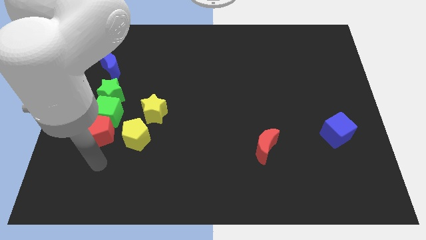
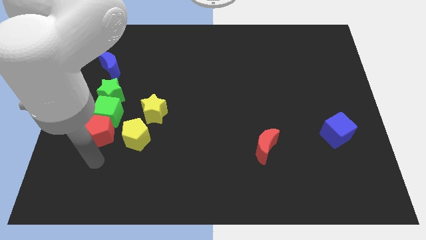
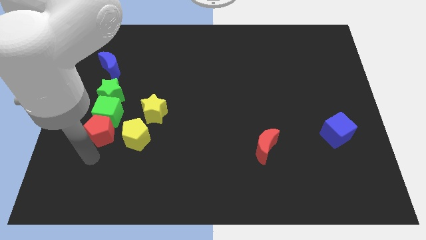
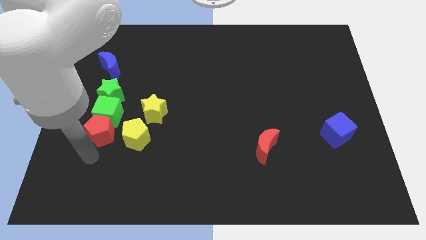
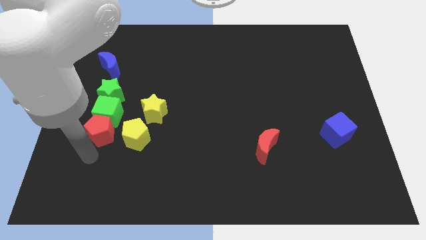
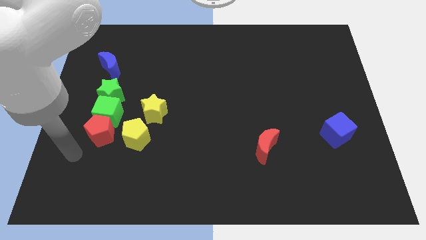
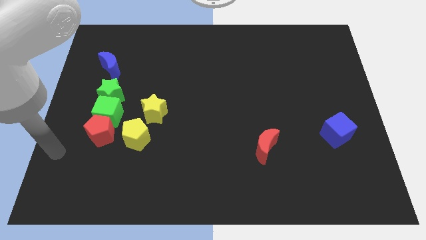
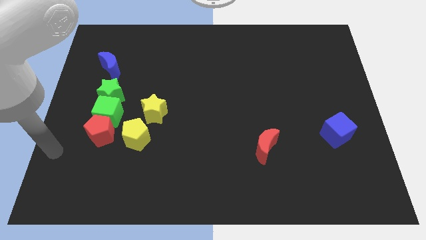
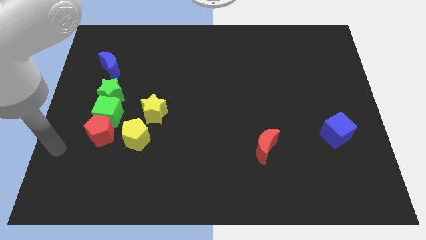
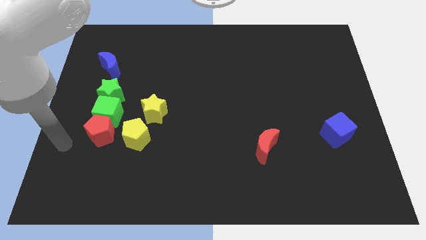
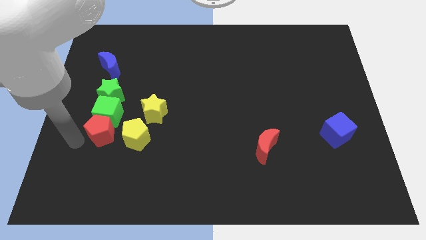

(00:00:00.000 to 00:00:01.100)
place the arm left to the red pentagon

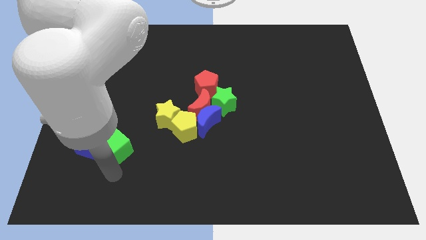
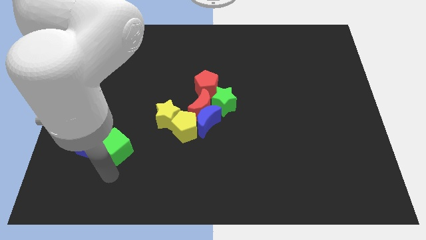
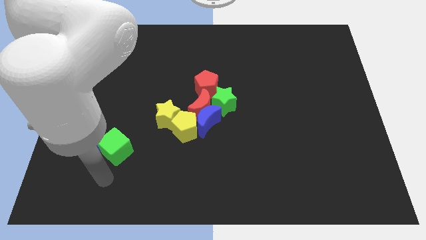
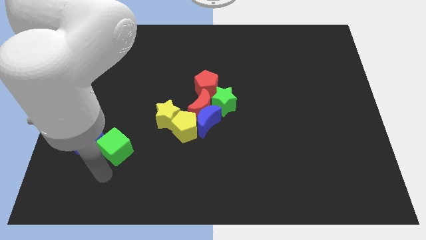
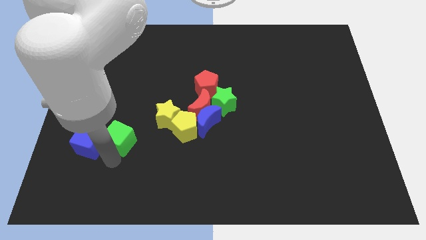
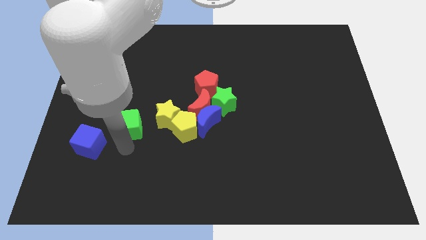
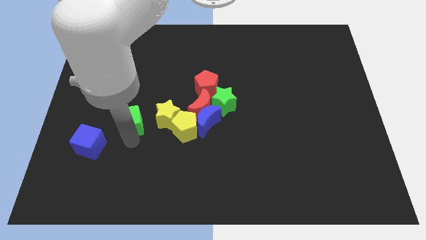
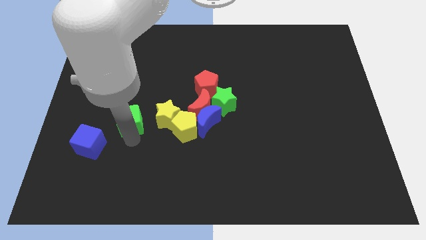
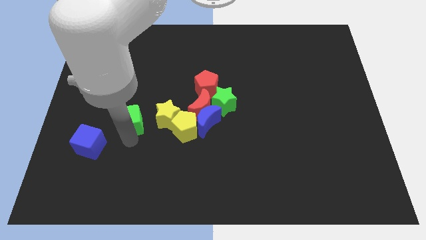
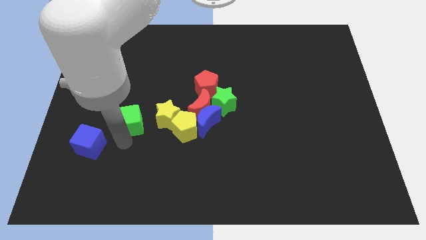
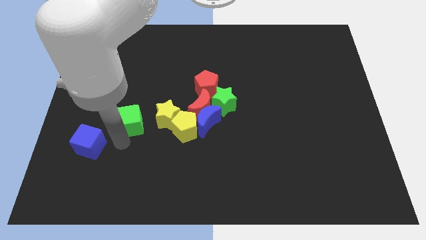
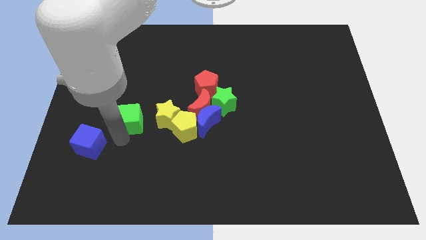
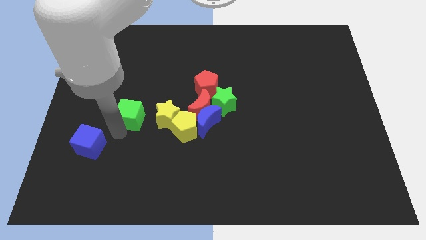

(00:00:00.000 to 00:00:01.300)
put the green cube to the left side of the yellow star

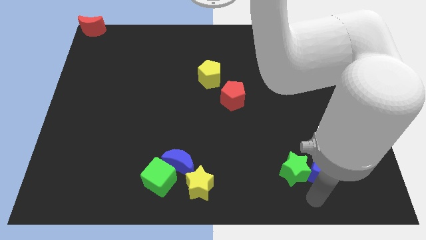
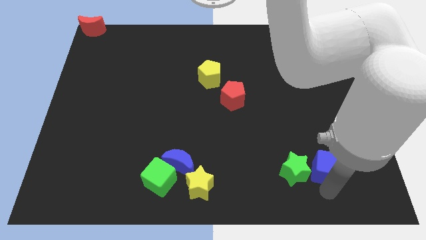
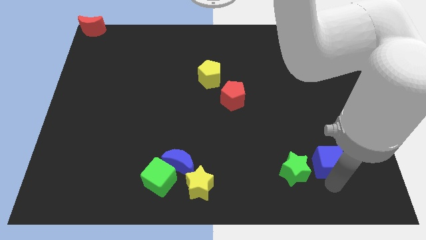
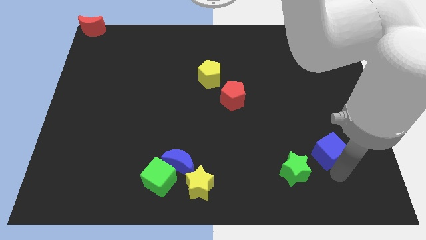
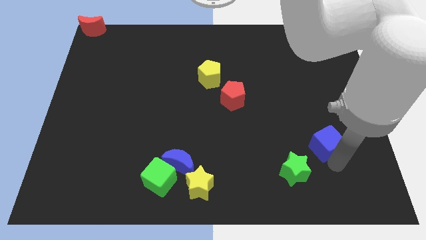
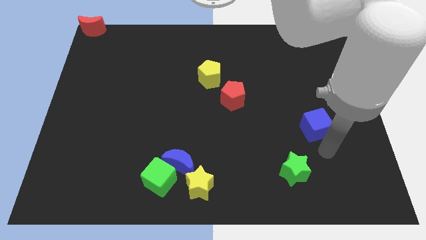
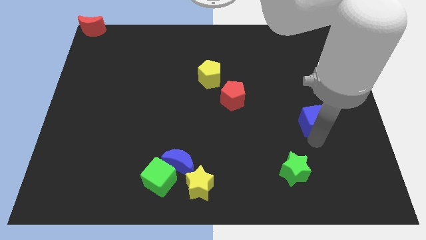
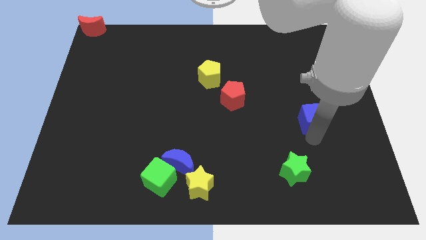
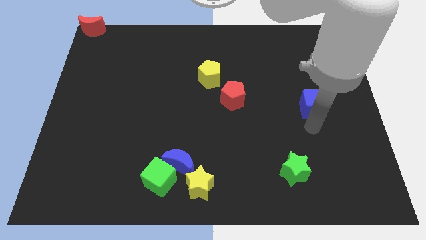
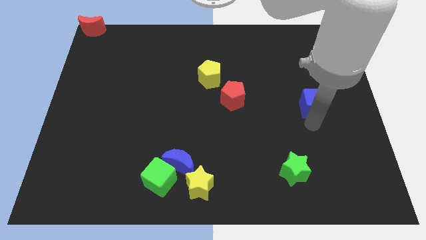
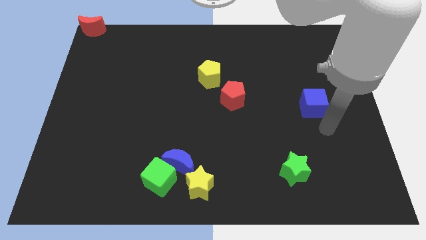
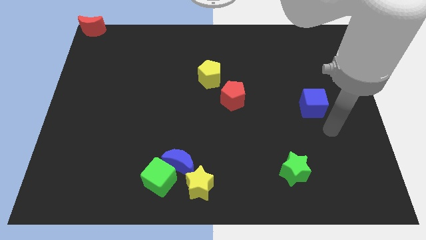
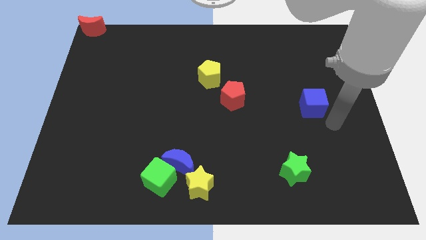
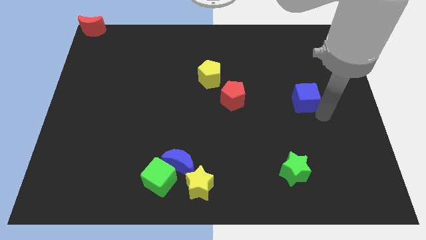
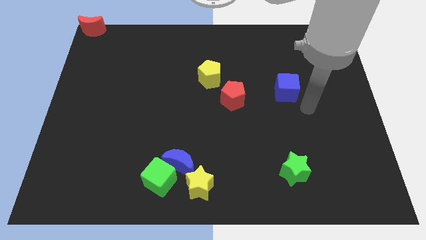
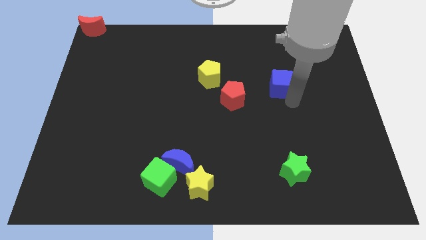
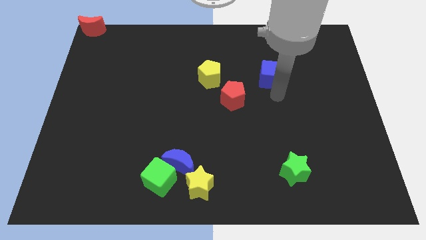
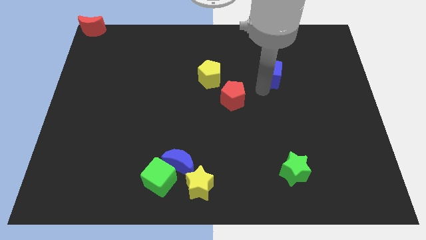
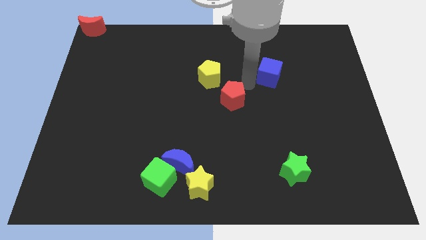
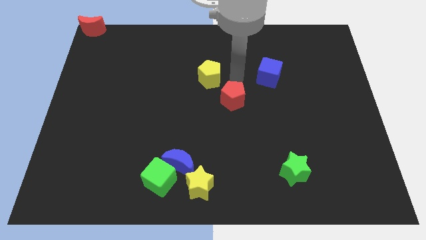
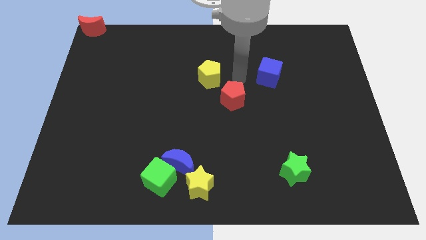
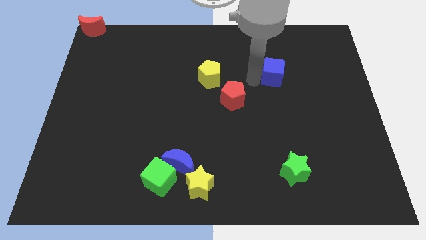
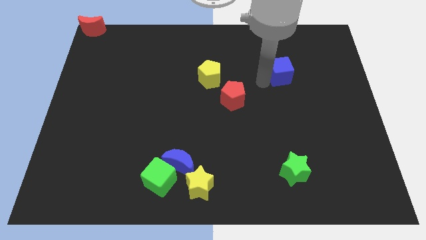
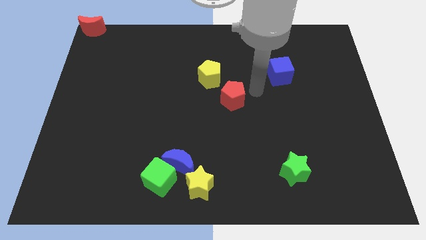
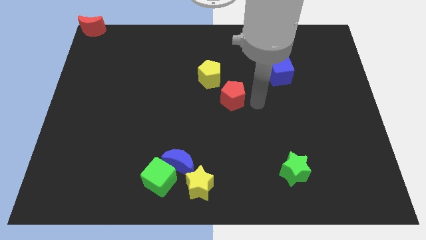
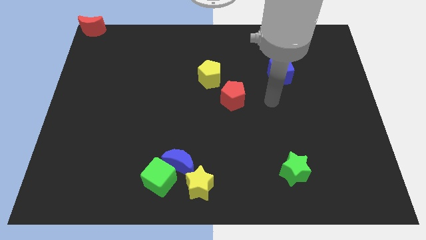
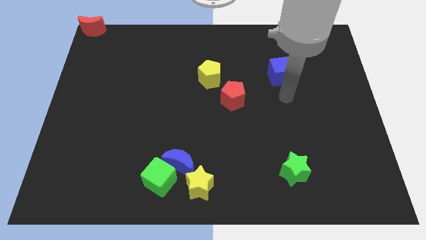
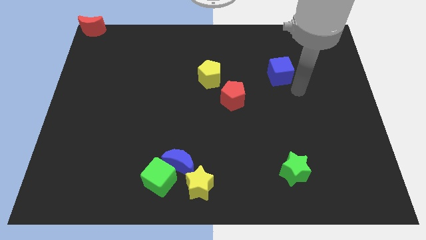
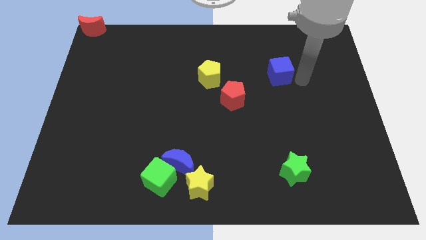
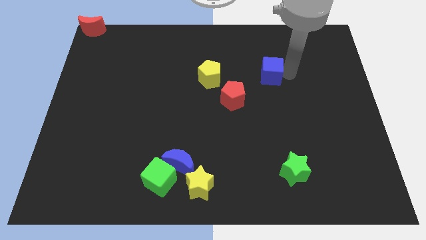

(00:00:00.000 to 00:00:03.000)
push the blue cube to the vertical top side of the green star

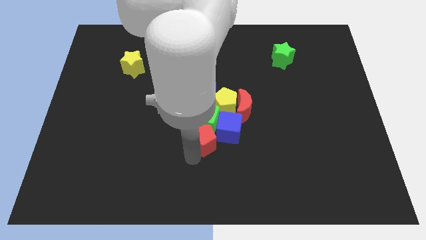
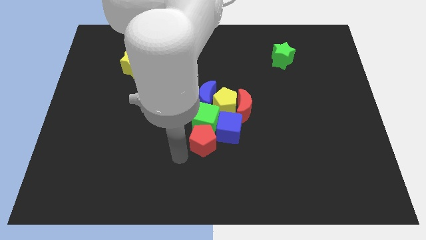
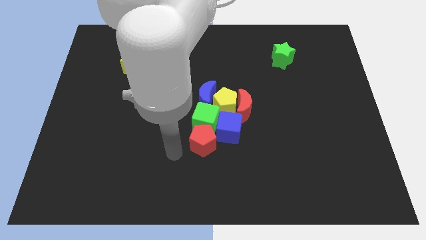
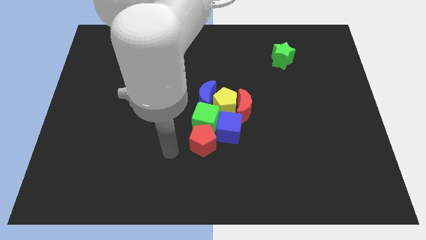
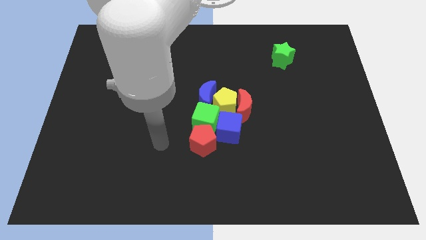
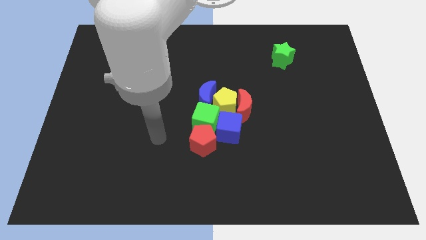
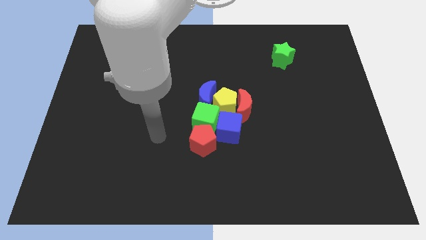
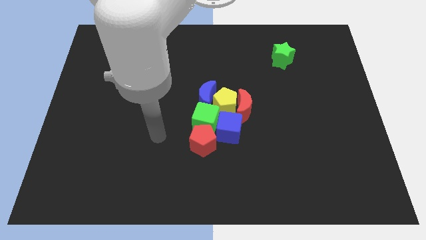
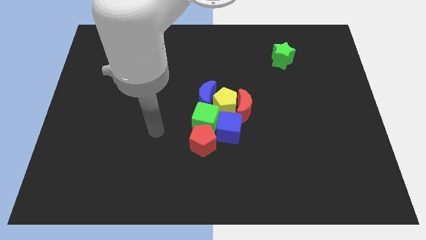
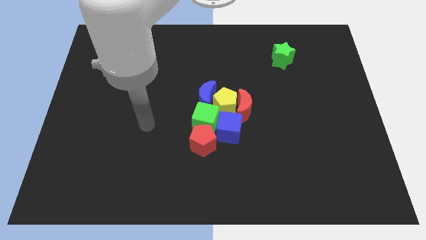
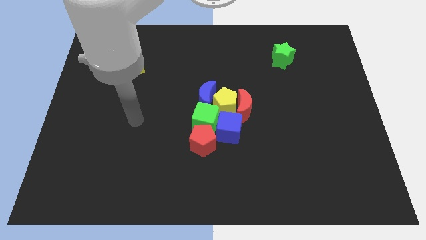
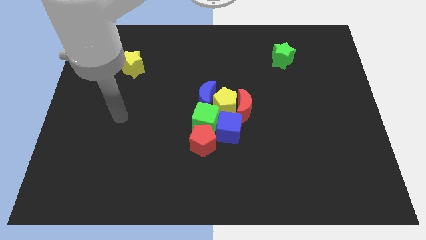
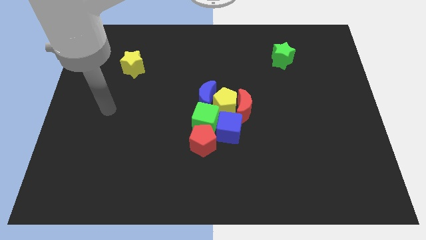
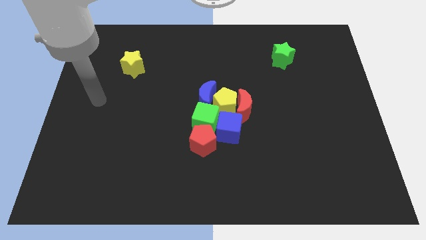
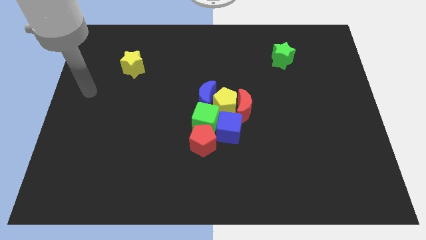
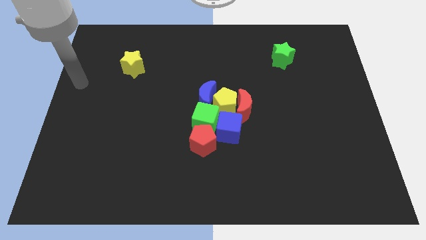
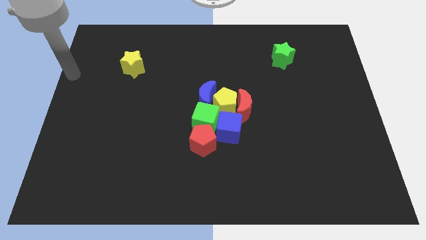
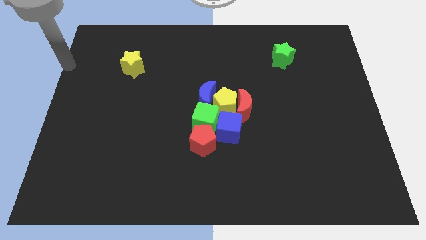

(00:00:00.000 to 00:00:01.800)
move your arm away from the red pentagon

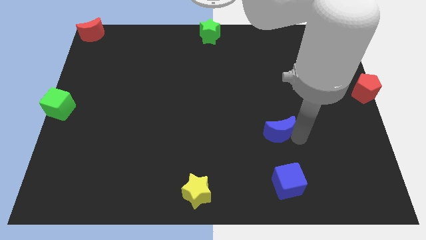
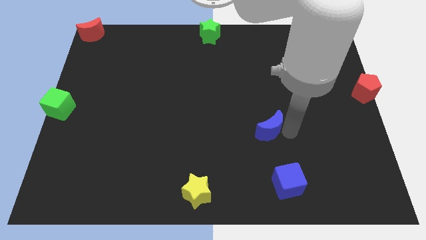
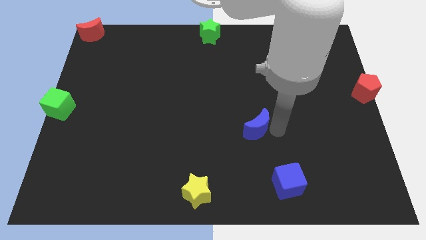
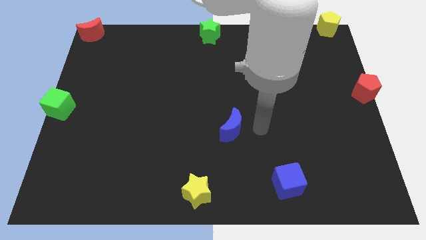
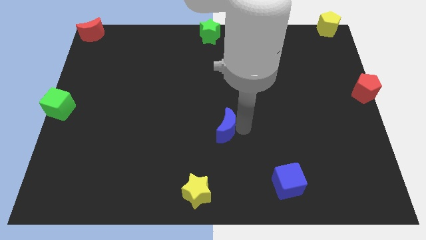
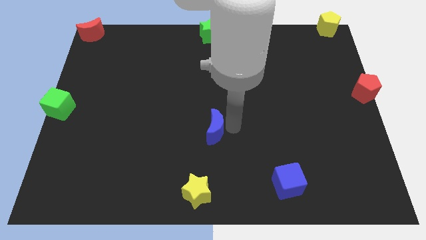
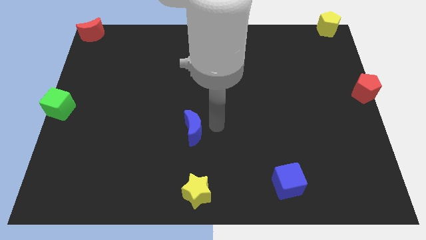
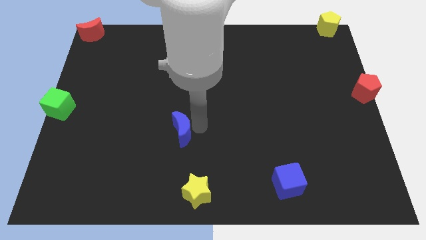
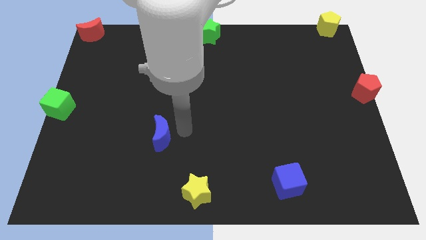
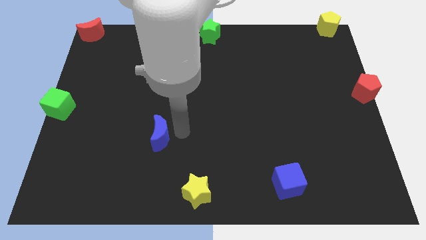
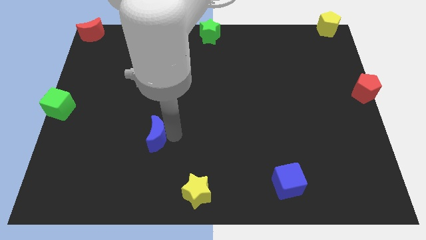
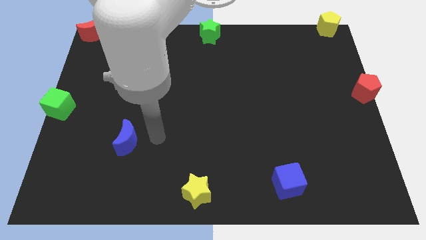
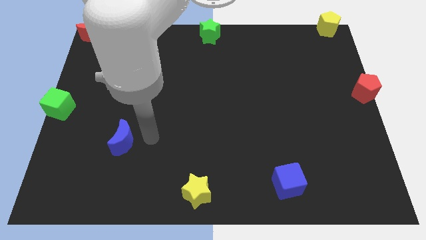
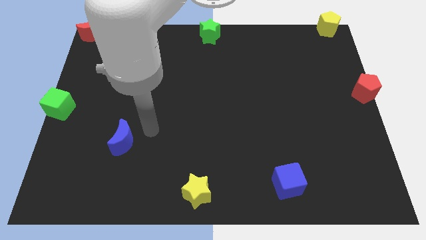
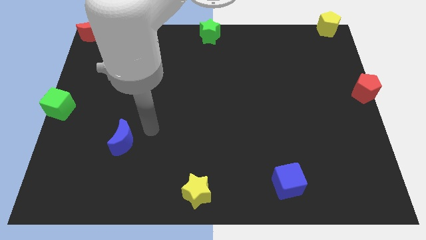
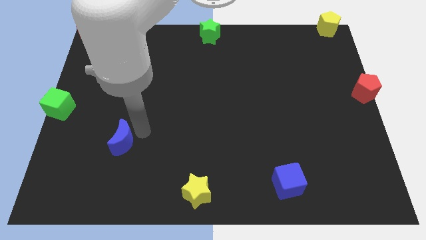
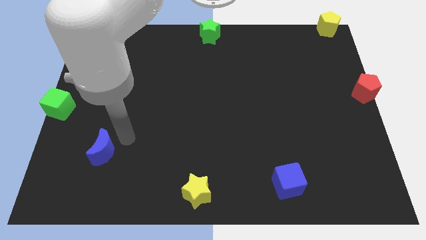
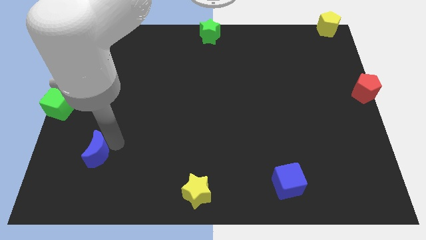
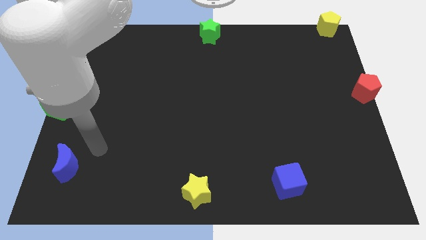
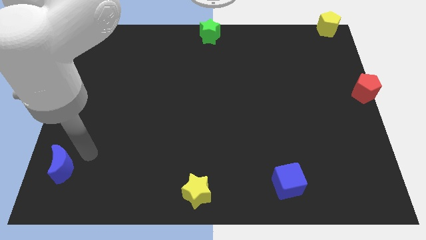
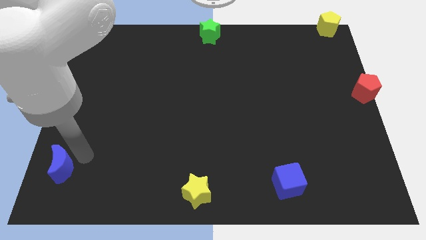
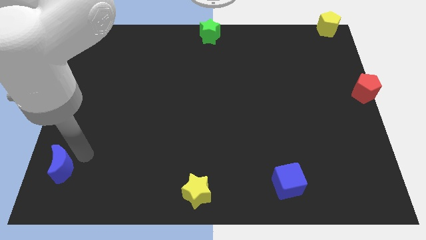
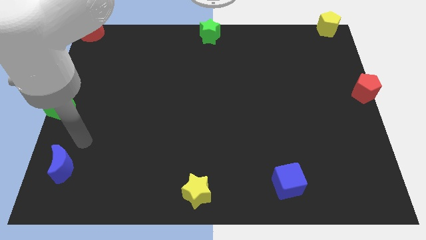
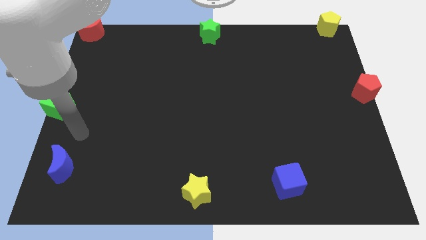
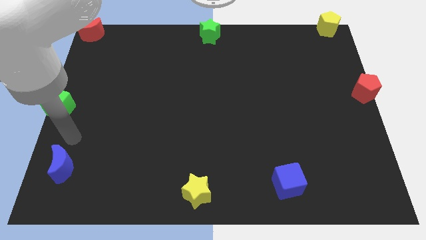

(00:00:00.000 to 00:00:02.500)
place the blue crescent at the bottom left corner of the board
